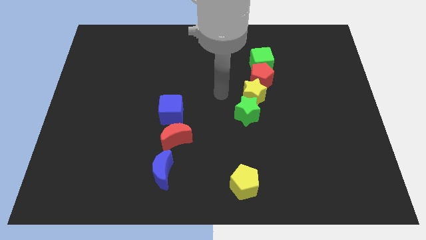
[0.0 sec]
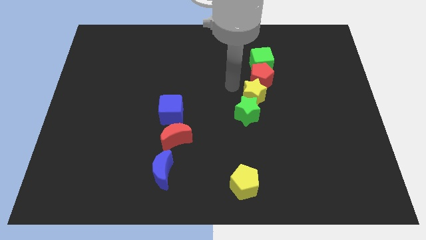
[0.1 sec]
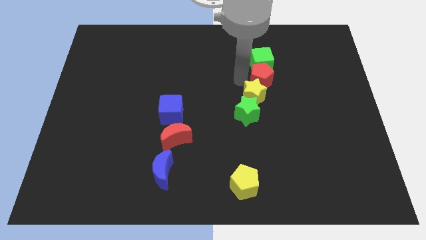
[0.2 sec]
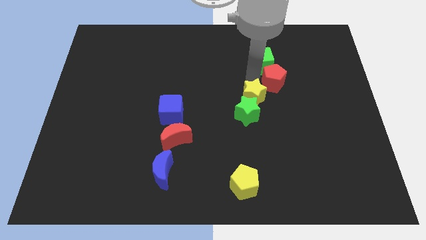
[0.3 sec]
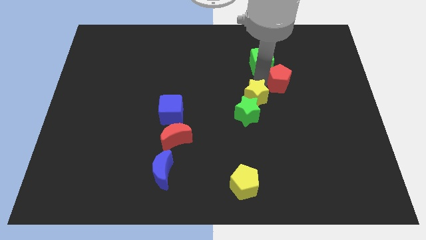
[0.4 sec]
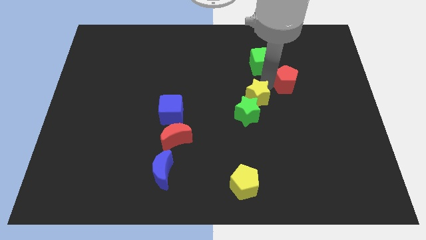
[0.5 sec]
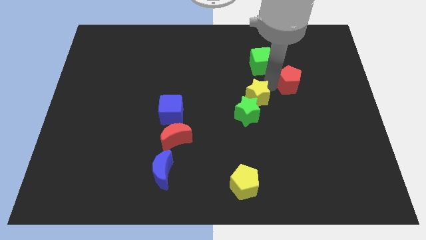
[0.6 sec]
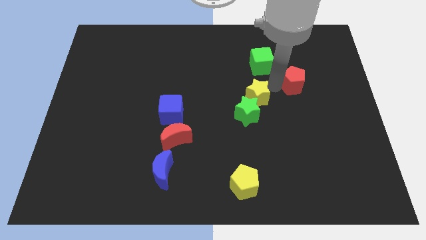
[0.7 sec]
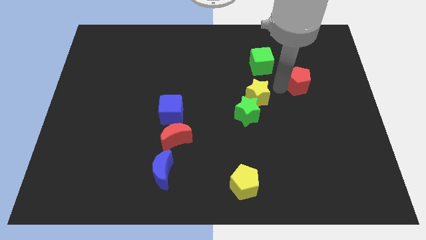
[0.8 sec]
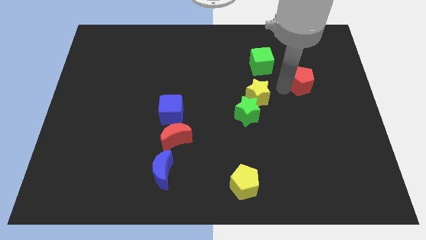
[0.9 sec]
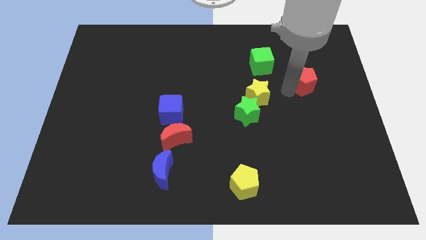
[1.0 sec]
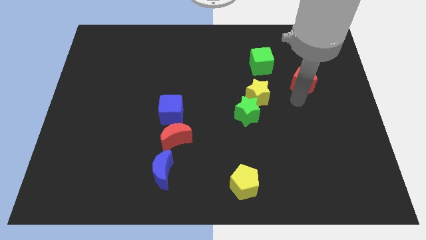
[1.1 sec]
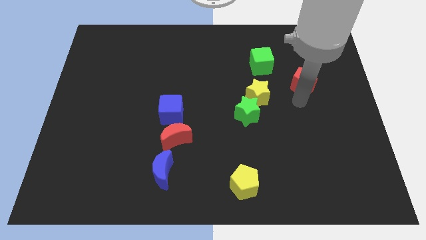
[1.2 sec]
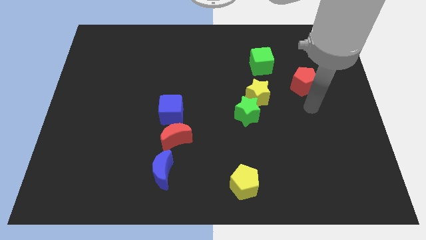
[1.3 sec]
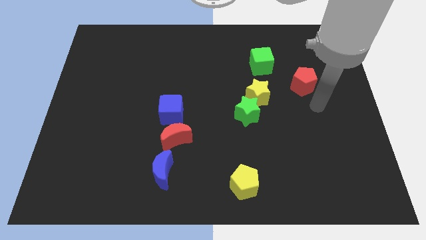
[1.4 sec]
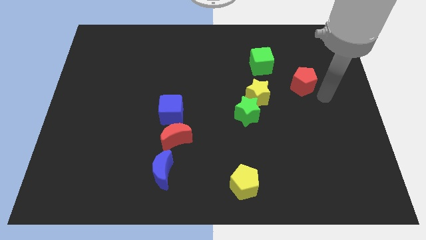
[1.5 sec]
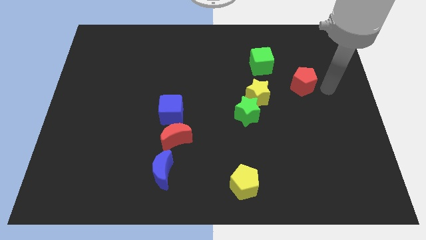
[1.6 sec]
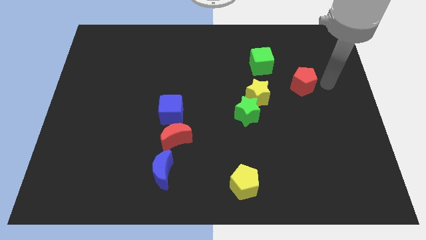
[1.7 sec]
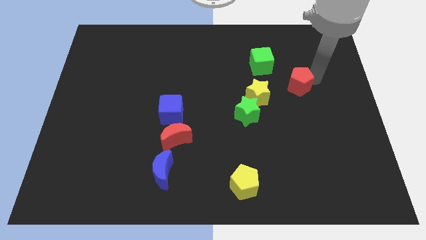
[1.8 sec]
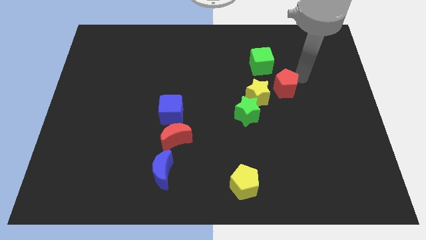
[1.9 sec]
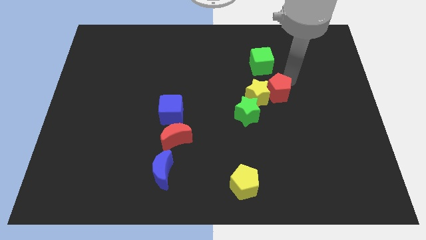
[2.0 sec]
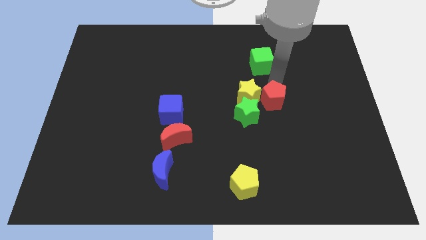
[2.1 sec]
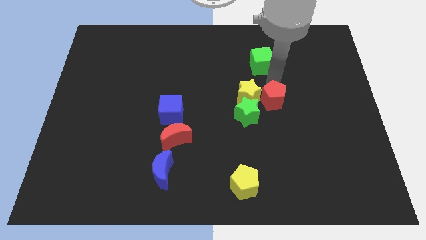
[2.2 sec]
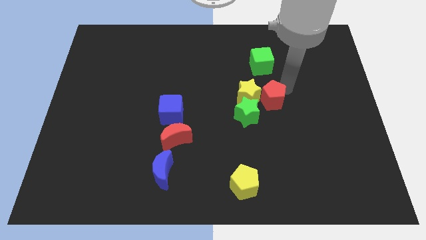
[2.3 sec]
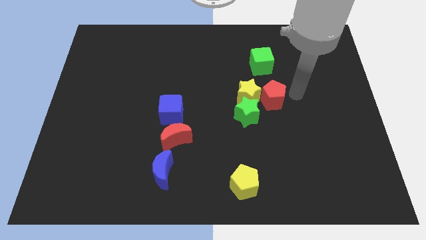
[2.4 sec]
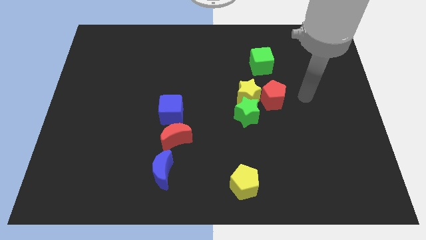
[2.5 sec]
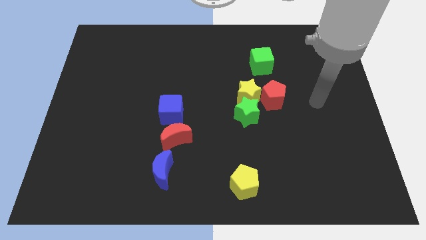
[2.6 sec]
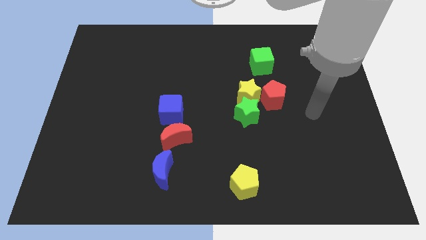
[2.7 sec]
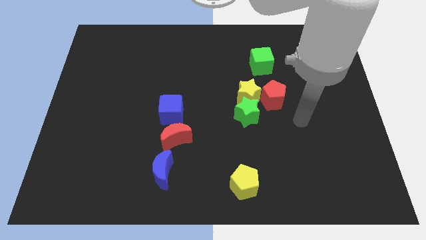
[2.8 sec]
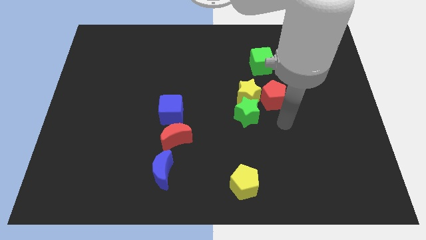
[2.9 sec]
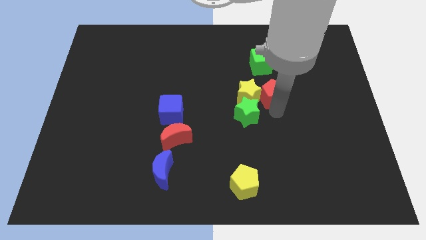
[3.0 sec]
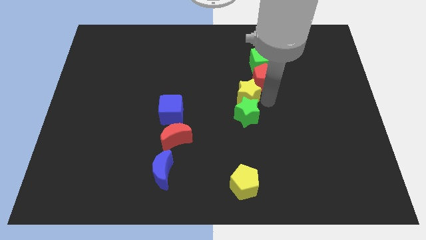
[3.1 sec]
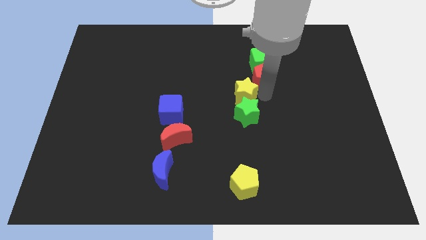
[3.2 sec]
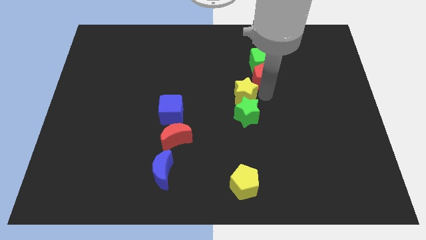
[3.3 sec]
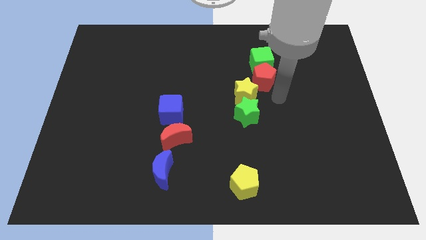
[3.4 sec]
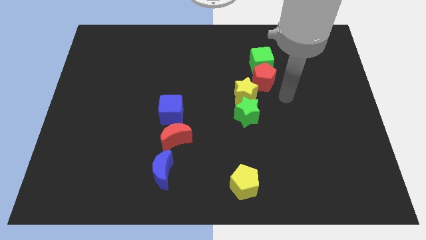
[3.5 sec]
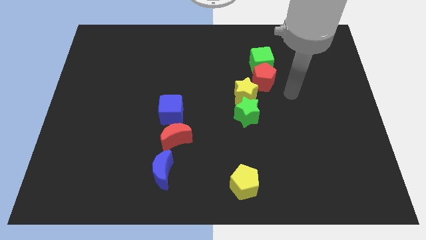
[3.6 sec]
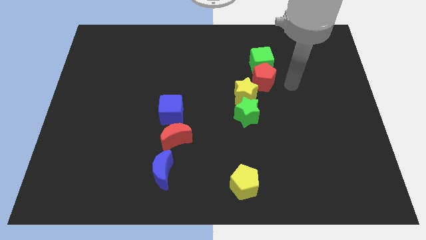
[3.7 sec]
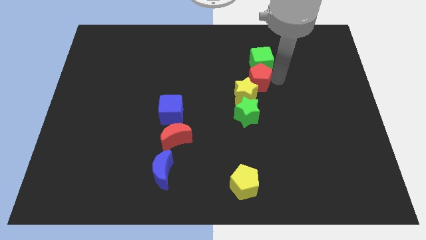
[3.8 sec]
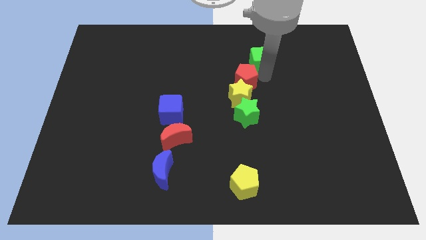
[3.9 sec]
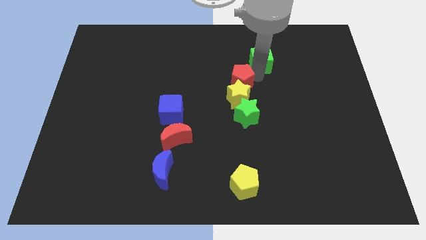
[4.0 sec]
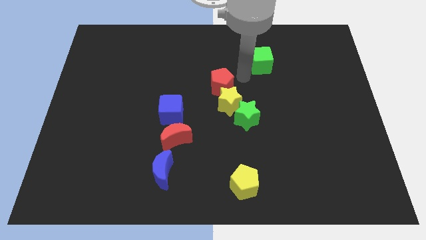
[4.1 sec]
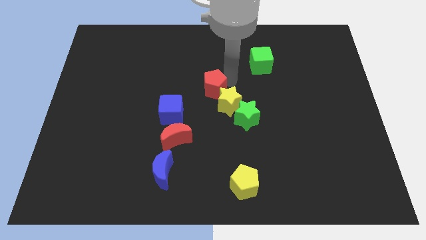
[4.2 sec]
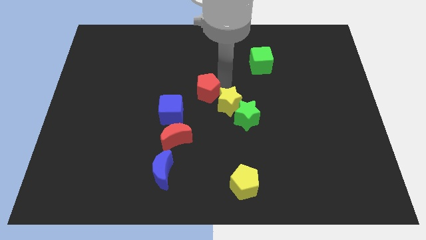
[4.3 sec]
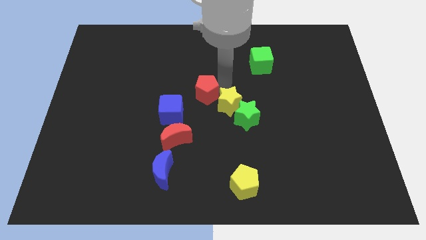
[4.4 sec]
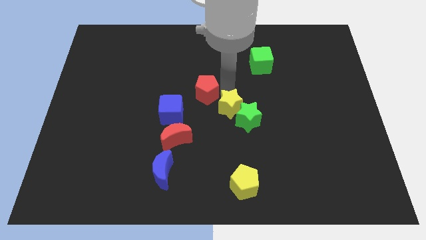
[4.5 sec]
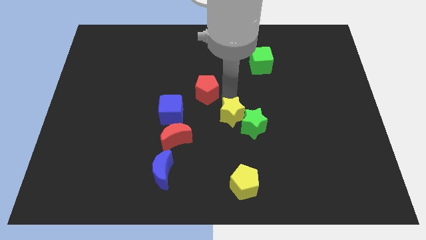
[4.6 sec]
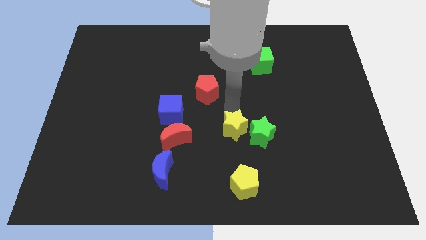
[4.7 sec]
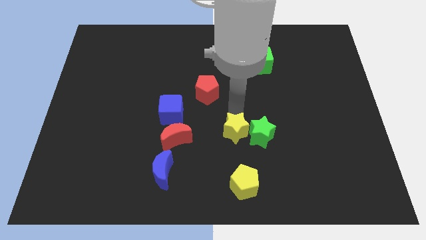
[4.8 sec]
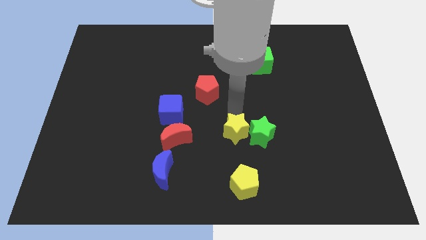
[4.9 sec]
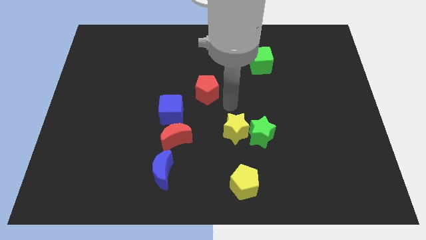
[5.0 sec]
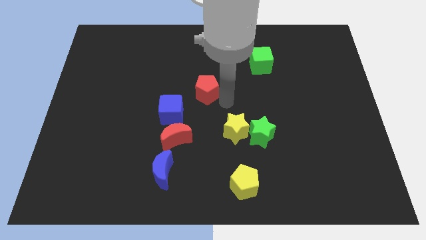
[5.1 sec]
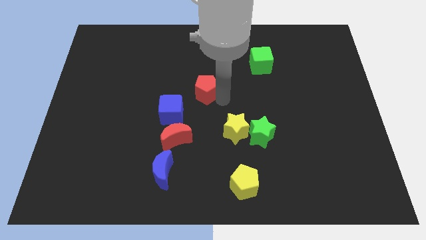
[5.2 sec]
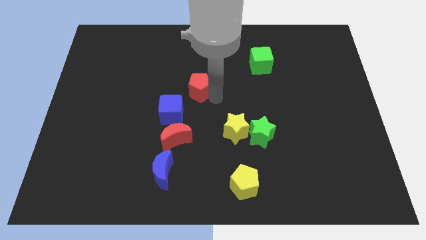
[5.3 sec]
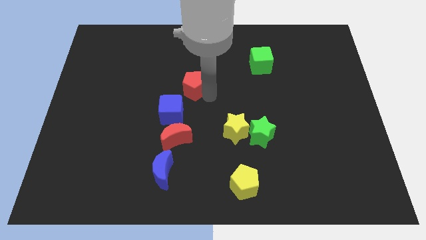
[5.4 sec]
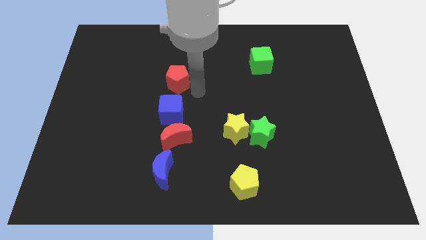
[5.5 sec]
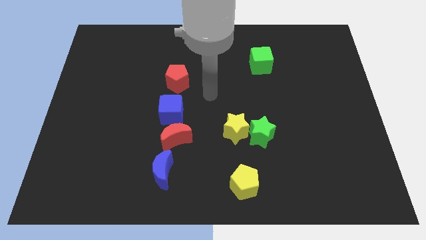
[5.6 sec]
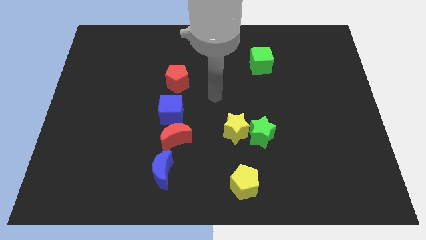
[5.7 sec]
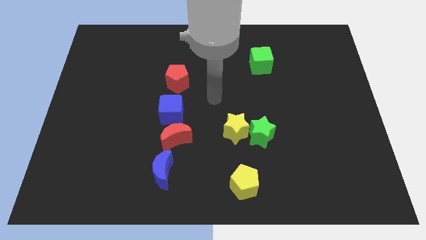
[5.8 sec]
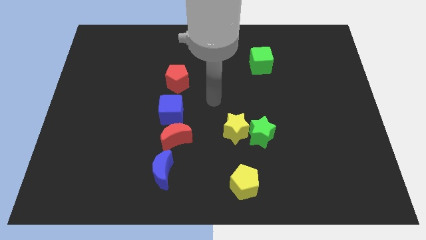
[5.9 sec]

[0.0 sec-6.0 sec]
place the red pentagon at the top of the blue cube

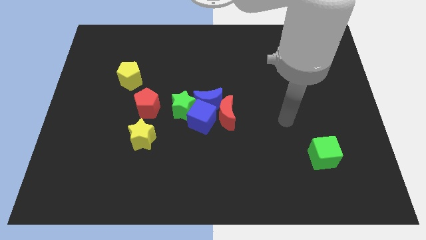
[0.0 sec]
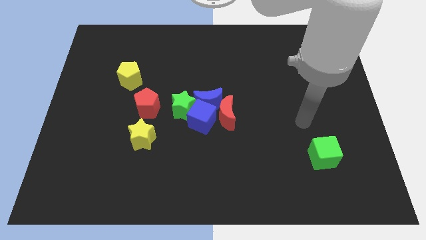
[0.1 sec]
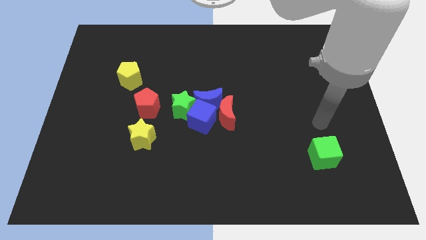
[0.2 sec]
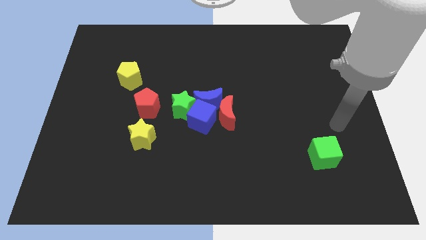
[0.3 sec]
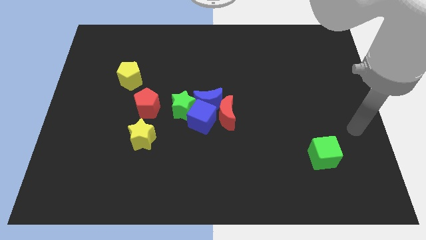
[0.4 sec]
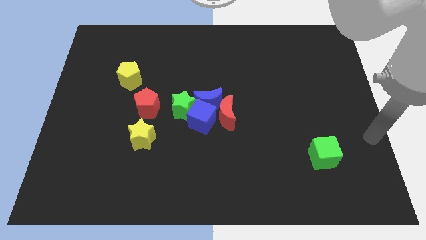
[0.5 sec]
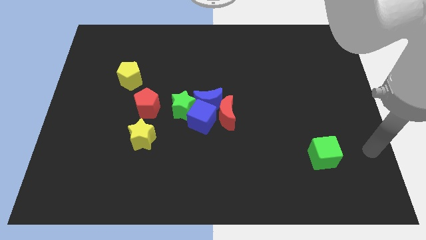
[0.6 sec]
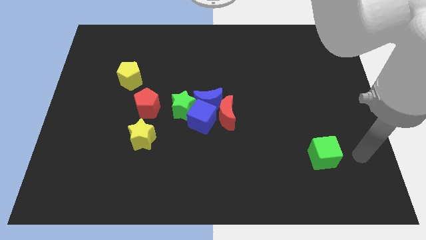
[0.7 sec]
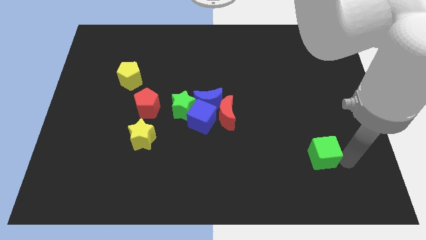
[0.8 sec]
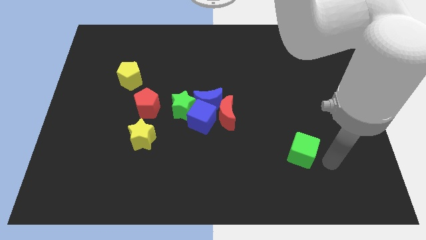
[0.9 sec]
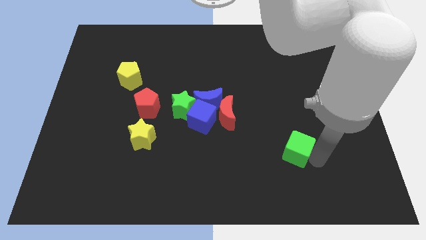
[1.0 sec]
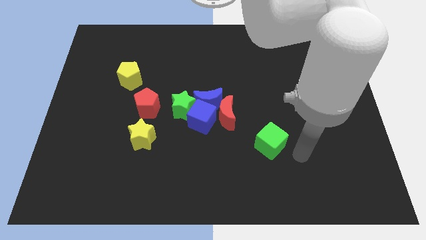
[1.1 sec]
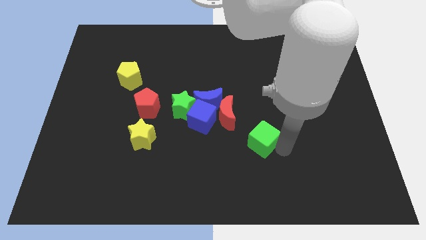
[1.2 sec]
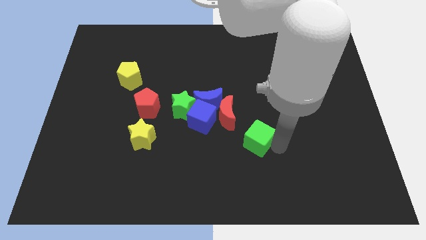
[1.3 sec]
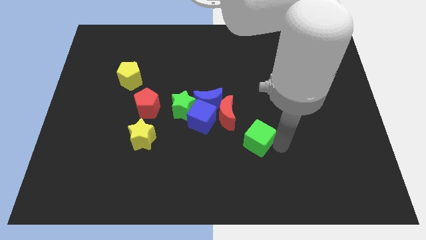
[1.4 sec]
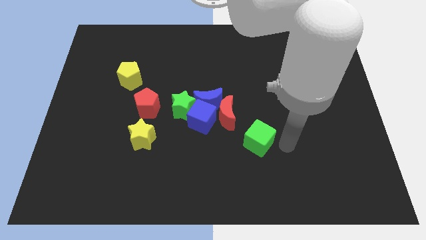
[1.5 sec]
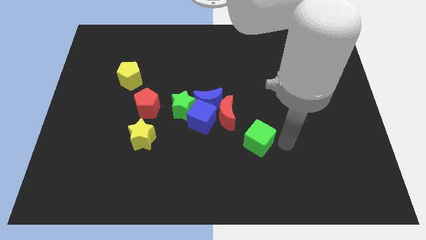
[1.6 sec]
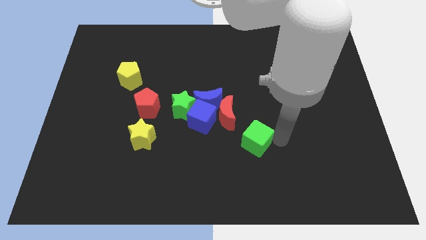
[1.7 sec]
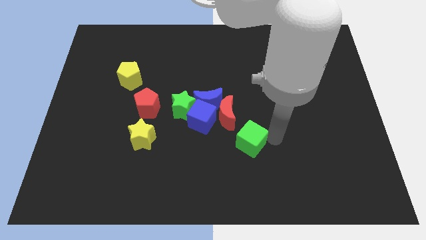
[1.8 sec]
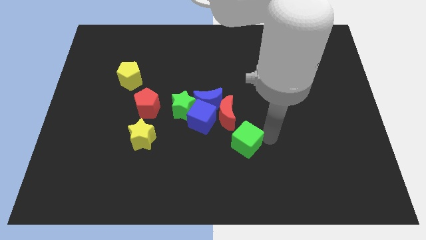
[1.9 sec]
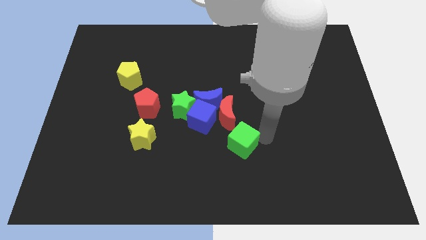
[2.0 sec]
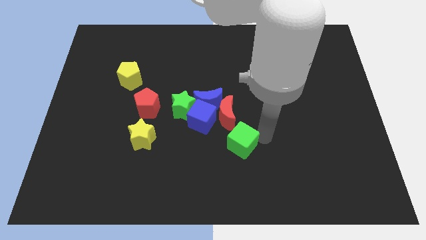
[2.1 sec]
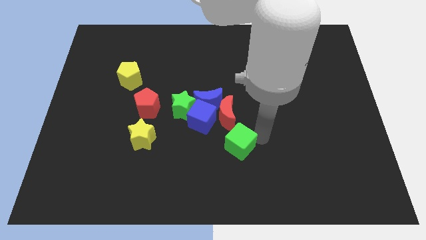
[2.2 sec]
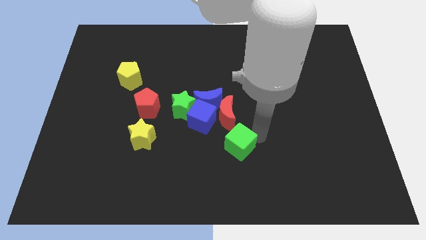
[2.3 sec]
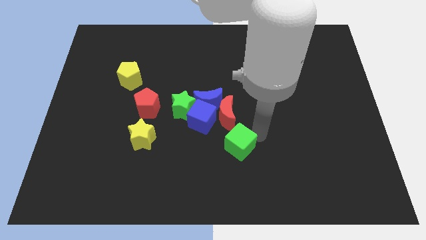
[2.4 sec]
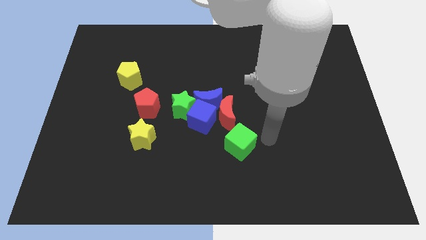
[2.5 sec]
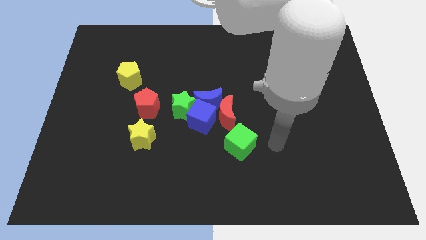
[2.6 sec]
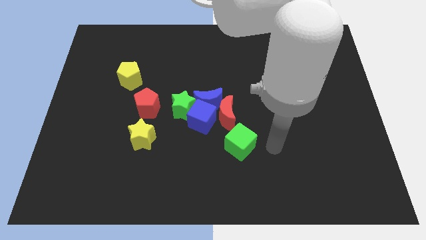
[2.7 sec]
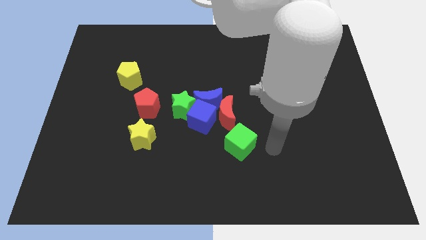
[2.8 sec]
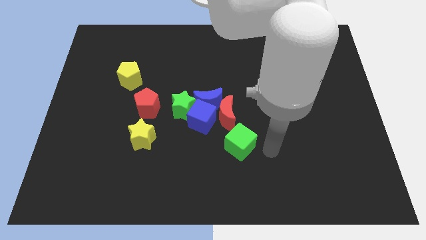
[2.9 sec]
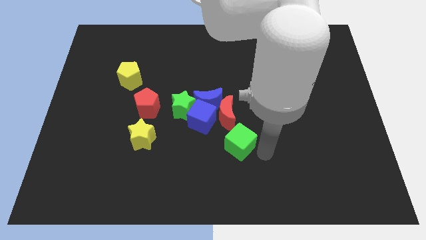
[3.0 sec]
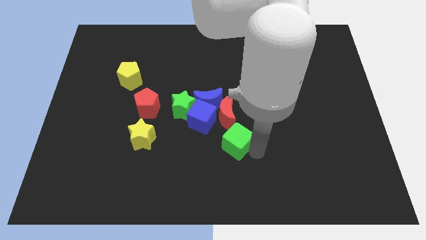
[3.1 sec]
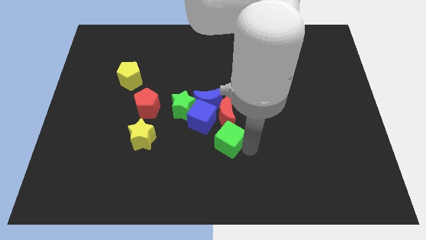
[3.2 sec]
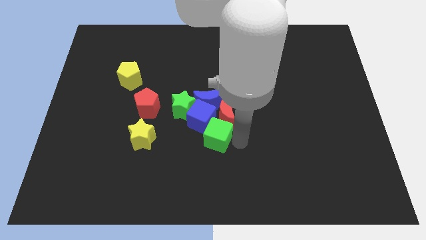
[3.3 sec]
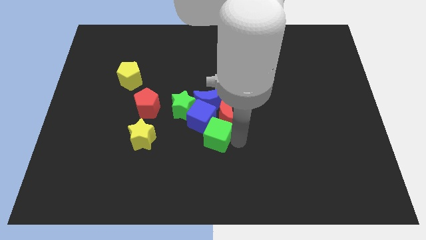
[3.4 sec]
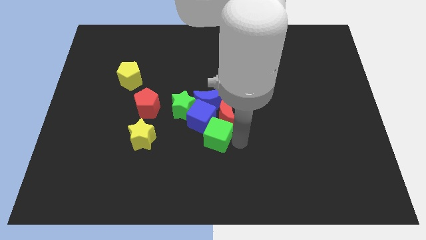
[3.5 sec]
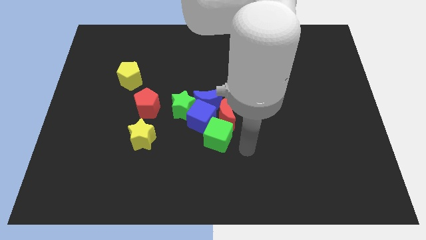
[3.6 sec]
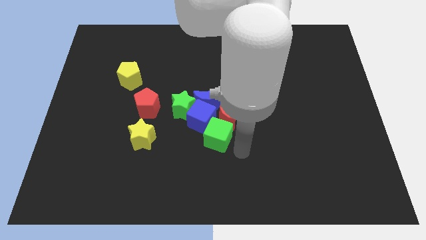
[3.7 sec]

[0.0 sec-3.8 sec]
push the green cube towards the center
